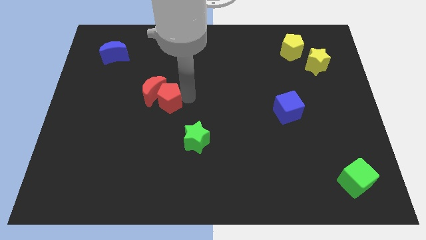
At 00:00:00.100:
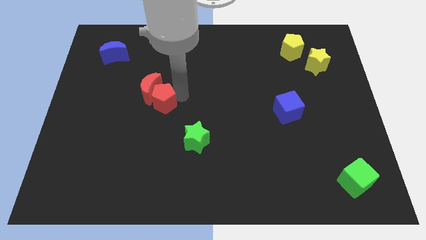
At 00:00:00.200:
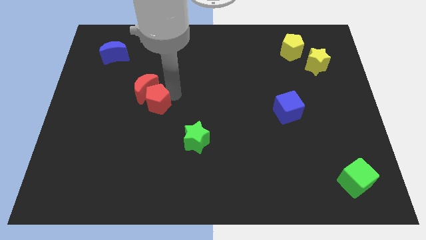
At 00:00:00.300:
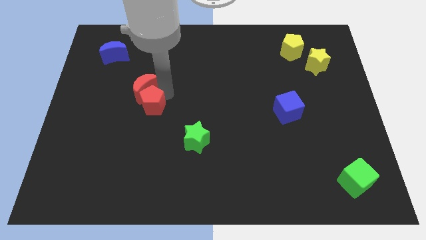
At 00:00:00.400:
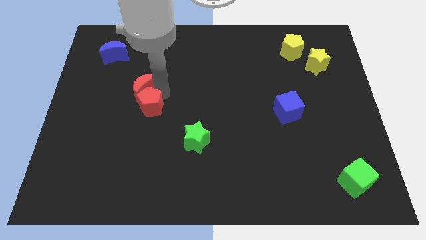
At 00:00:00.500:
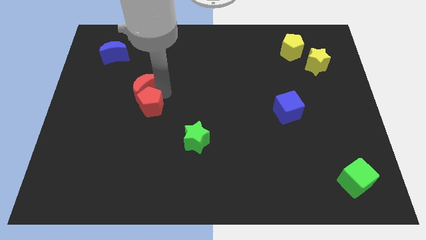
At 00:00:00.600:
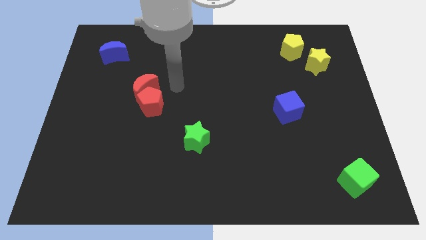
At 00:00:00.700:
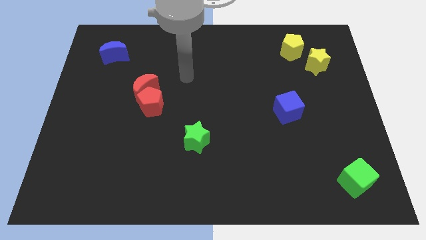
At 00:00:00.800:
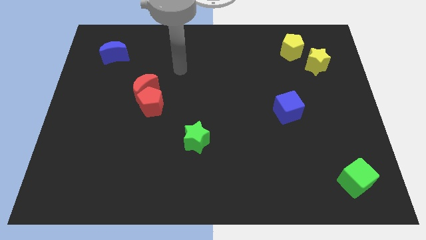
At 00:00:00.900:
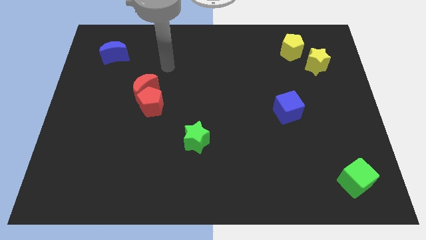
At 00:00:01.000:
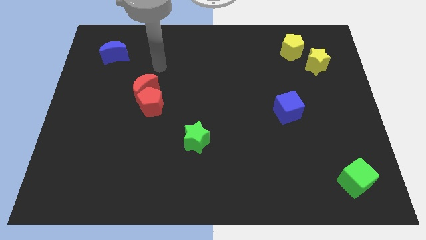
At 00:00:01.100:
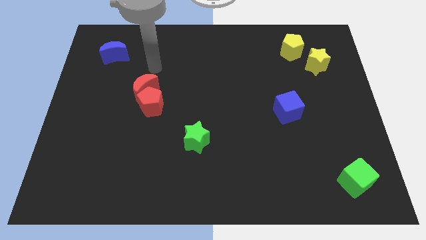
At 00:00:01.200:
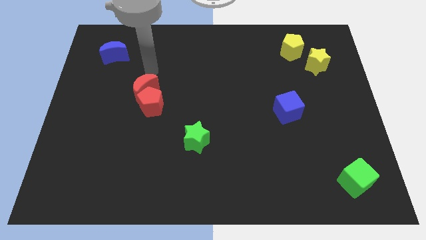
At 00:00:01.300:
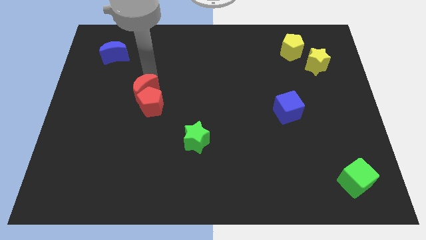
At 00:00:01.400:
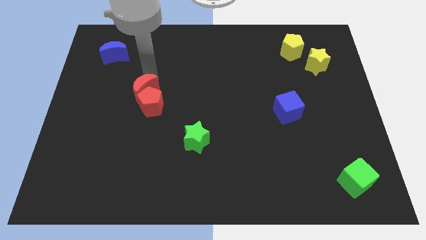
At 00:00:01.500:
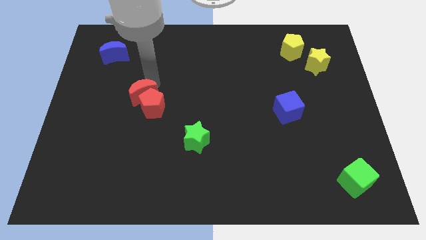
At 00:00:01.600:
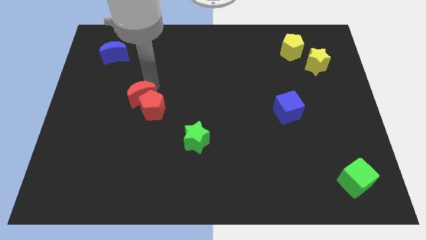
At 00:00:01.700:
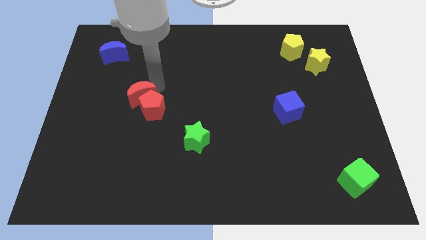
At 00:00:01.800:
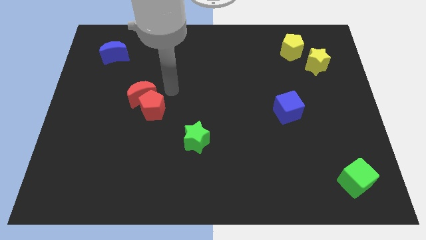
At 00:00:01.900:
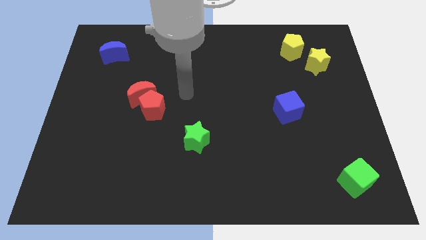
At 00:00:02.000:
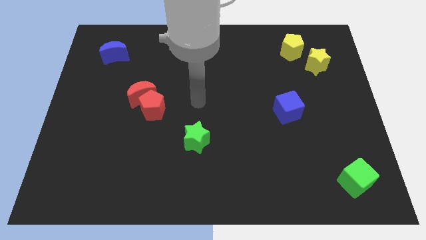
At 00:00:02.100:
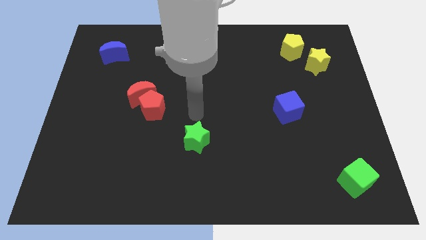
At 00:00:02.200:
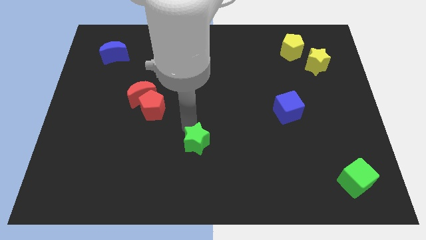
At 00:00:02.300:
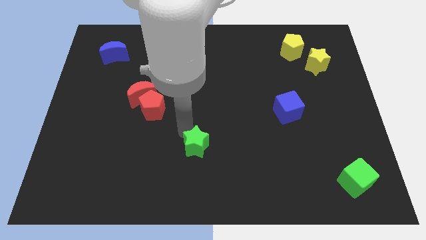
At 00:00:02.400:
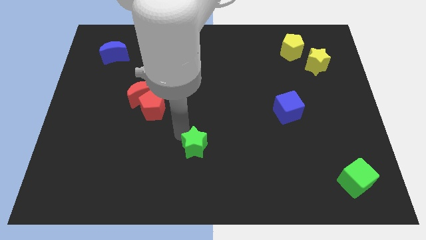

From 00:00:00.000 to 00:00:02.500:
point your arm above green star

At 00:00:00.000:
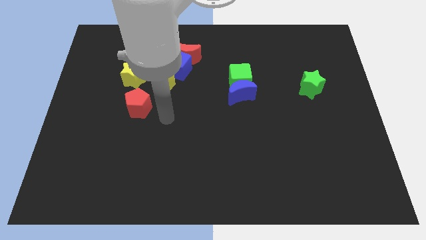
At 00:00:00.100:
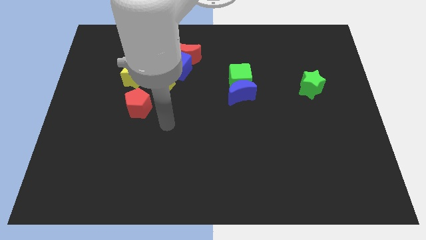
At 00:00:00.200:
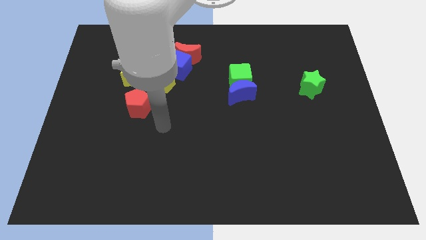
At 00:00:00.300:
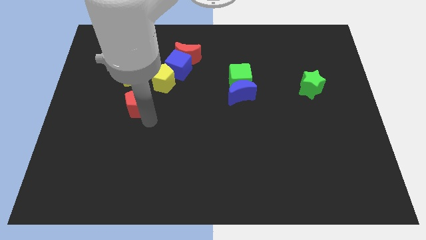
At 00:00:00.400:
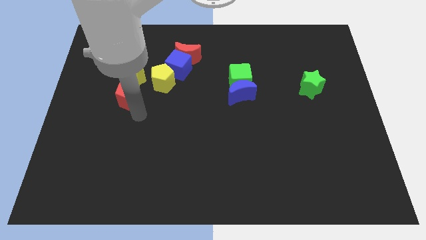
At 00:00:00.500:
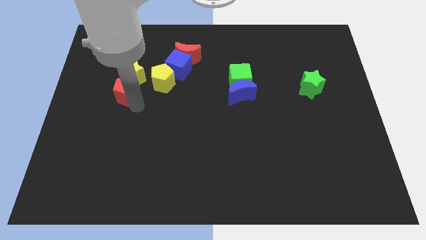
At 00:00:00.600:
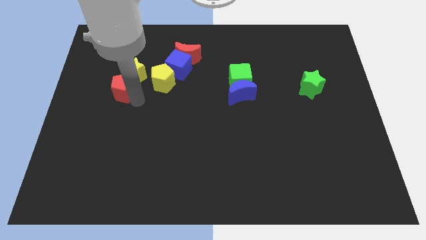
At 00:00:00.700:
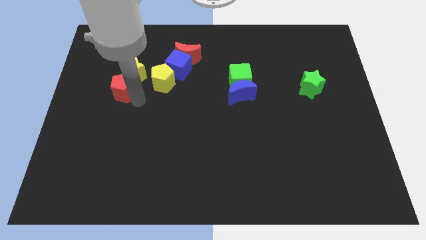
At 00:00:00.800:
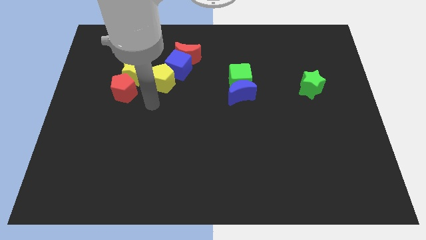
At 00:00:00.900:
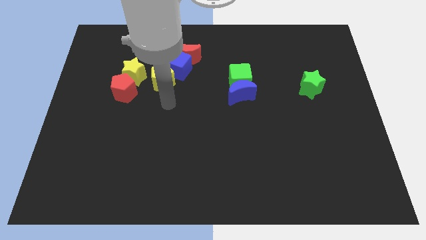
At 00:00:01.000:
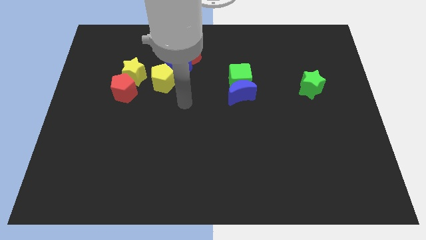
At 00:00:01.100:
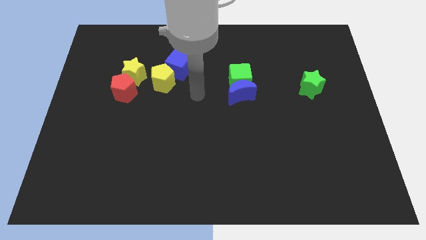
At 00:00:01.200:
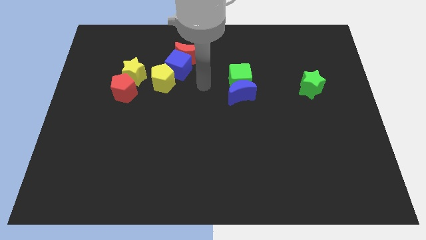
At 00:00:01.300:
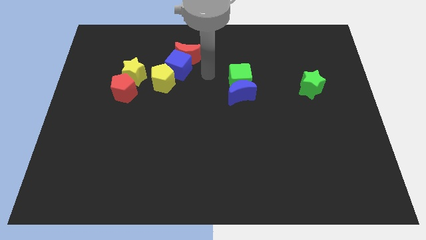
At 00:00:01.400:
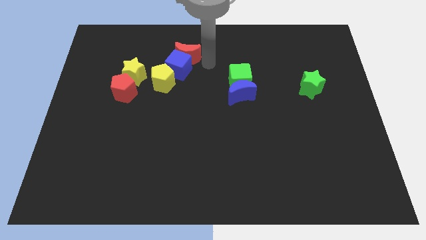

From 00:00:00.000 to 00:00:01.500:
place the red pentagon below the yellow star

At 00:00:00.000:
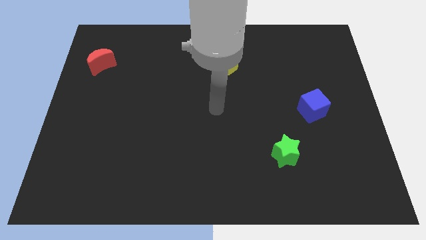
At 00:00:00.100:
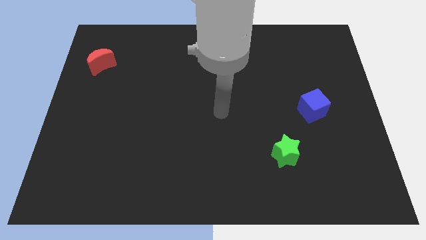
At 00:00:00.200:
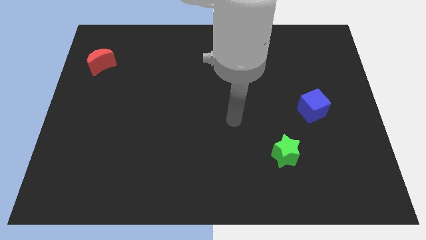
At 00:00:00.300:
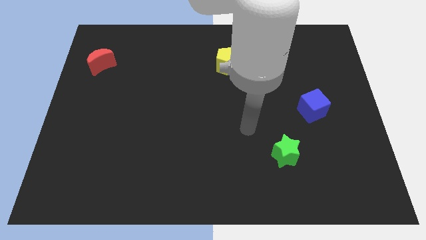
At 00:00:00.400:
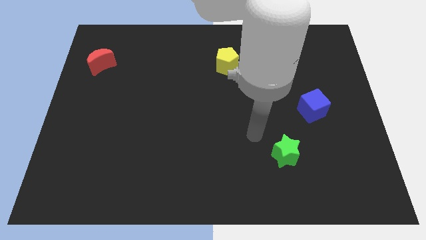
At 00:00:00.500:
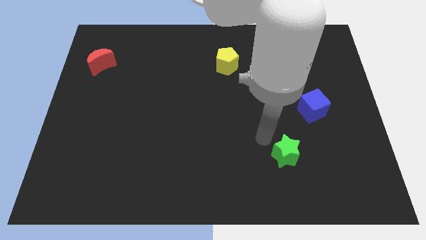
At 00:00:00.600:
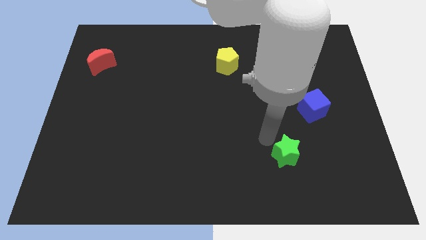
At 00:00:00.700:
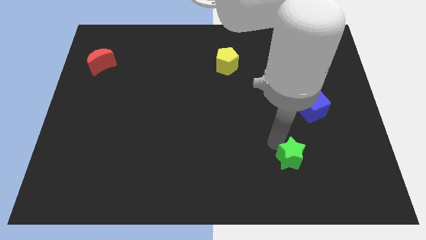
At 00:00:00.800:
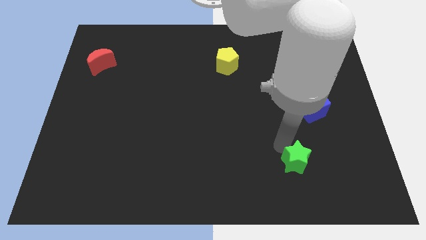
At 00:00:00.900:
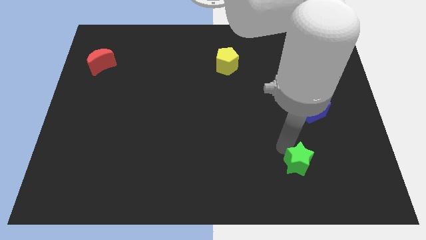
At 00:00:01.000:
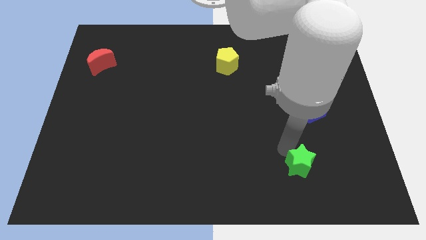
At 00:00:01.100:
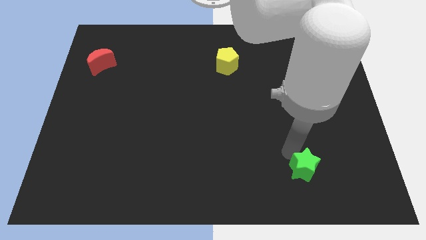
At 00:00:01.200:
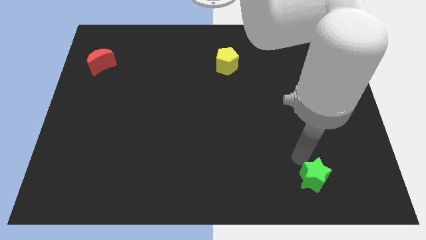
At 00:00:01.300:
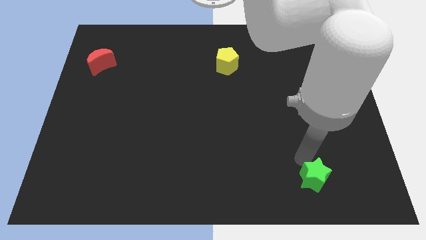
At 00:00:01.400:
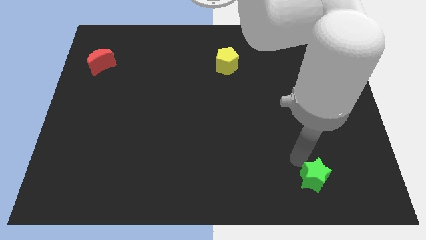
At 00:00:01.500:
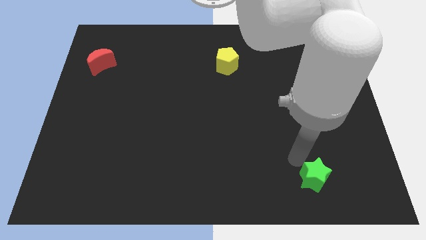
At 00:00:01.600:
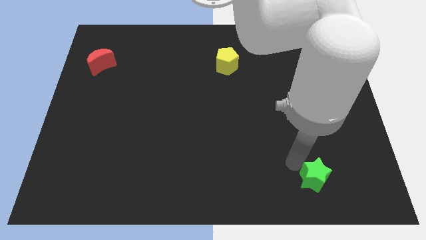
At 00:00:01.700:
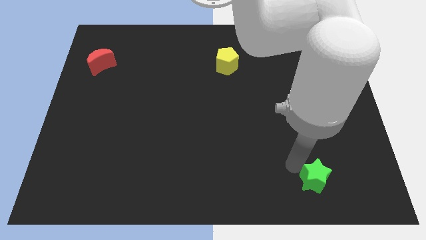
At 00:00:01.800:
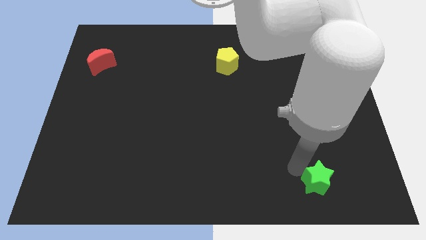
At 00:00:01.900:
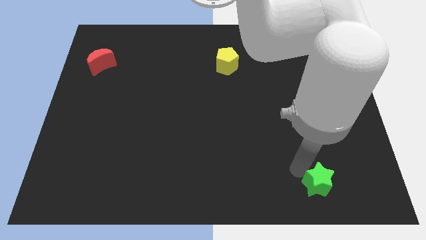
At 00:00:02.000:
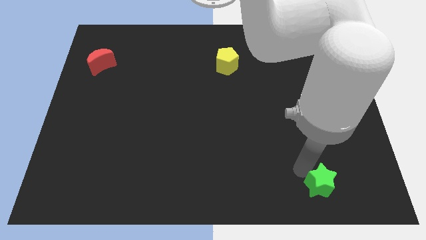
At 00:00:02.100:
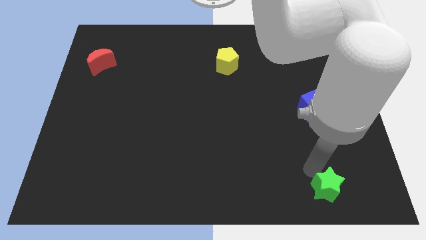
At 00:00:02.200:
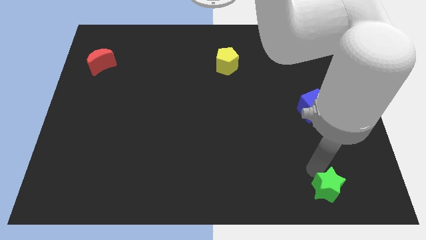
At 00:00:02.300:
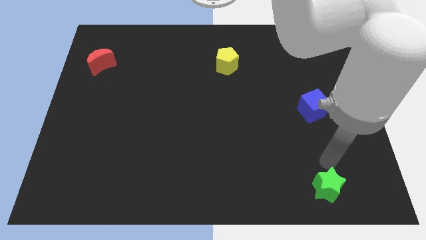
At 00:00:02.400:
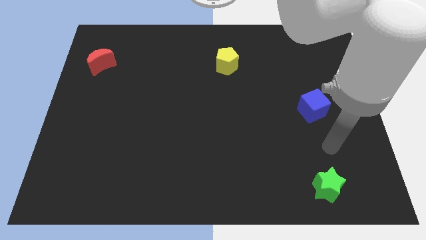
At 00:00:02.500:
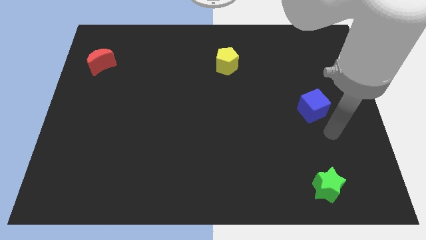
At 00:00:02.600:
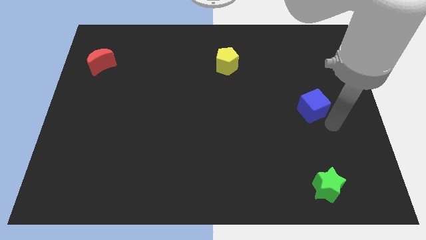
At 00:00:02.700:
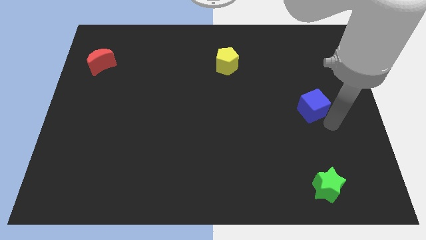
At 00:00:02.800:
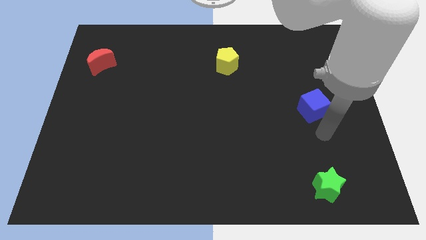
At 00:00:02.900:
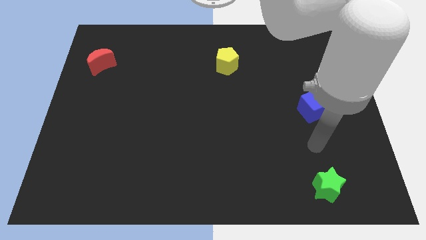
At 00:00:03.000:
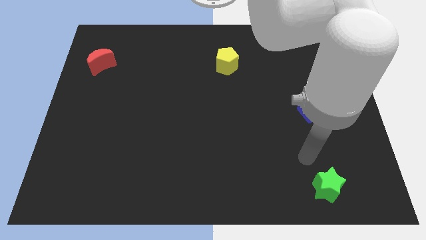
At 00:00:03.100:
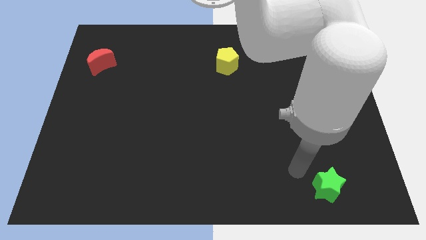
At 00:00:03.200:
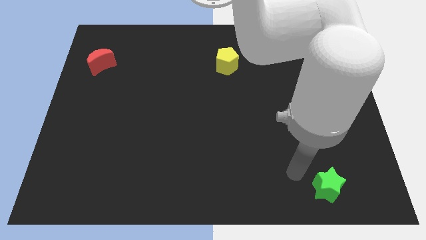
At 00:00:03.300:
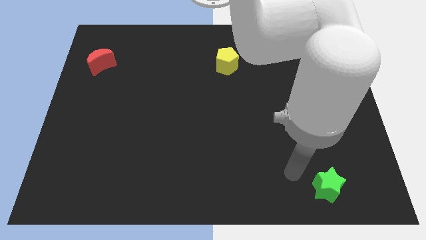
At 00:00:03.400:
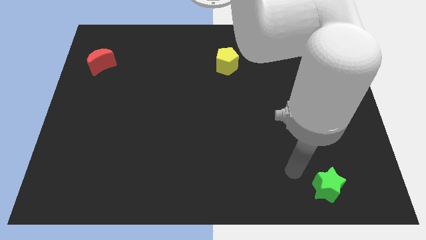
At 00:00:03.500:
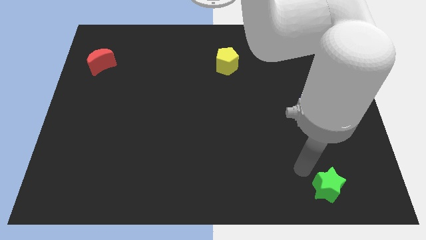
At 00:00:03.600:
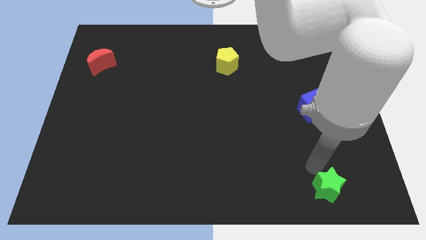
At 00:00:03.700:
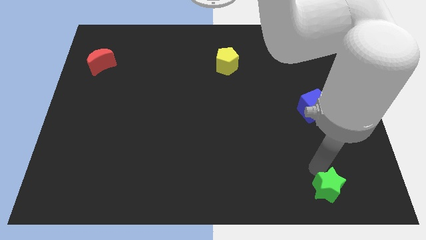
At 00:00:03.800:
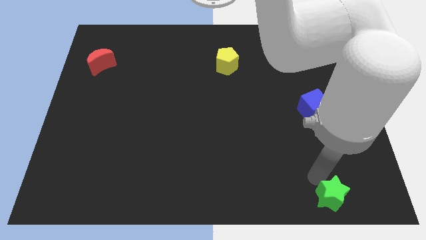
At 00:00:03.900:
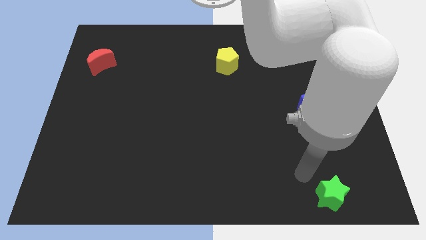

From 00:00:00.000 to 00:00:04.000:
move green star to the bottom of the board

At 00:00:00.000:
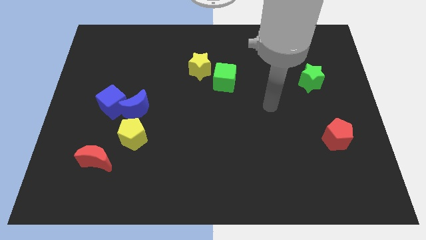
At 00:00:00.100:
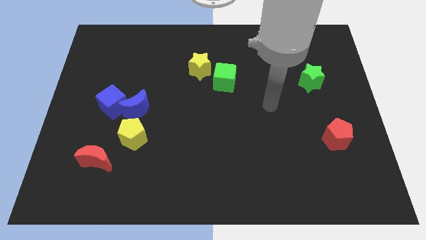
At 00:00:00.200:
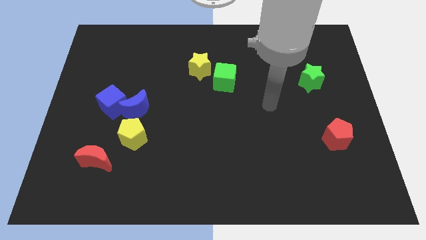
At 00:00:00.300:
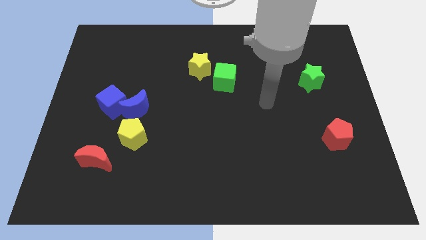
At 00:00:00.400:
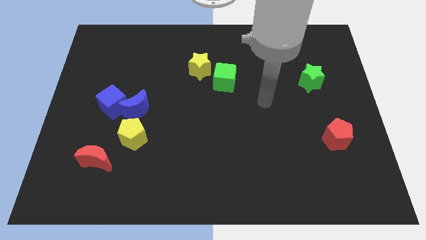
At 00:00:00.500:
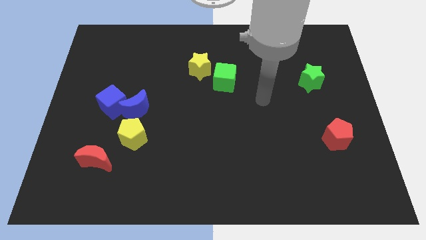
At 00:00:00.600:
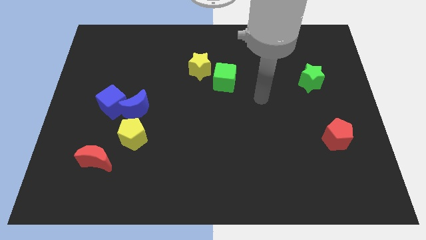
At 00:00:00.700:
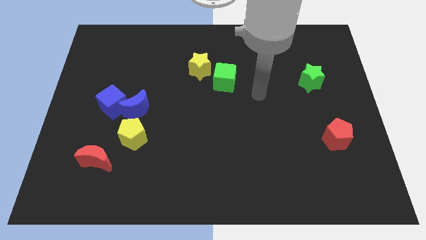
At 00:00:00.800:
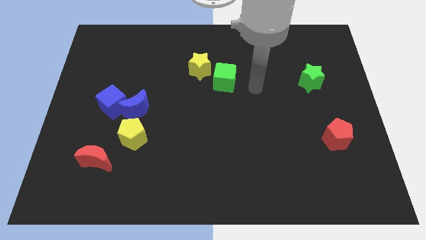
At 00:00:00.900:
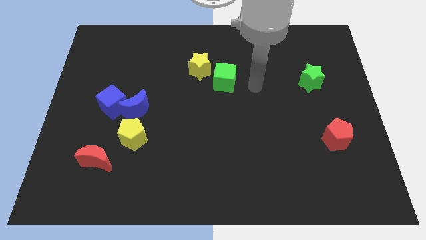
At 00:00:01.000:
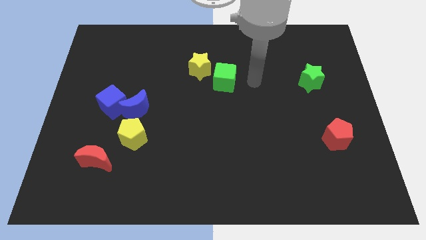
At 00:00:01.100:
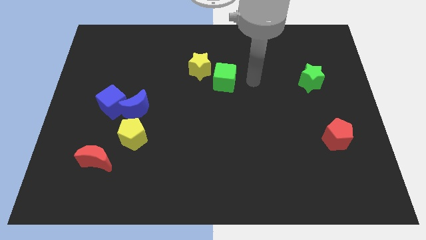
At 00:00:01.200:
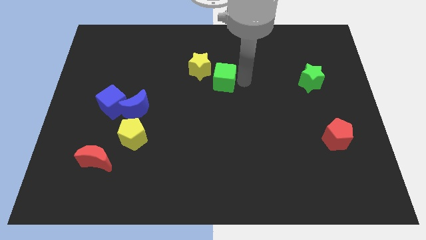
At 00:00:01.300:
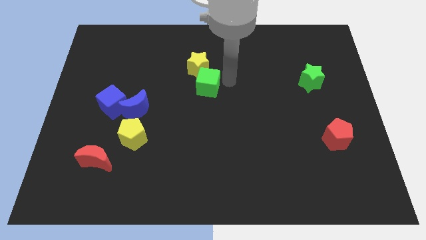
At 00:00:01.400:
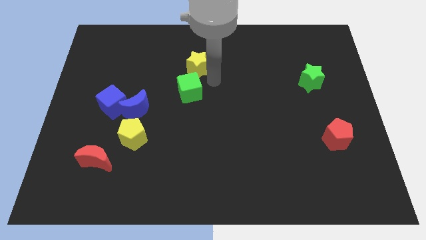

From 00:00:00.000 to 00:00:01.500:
move your arm towards the green cube
